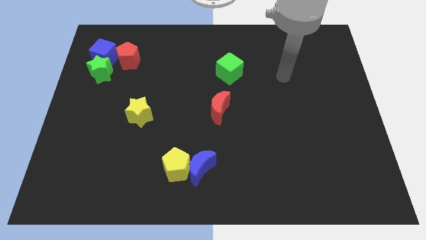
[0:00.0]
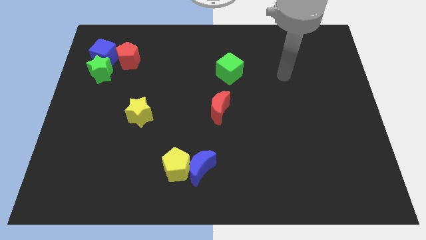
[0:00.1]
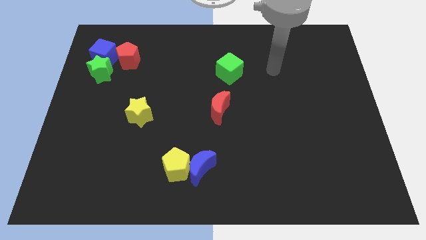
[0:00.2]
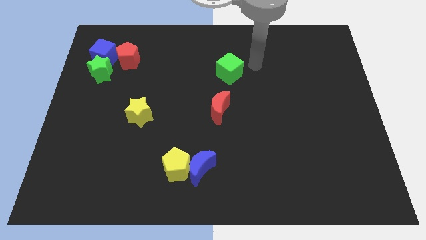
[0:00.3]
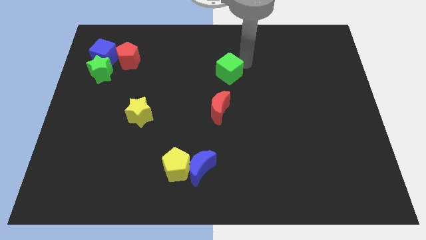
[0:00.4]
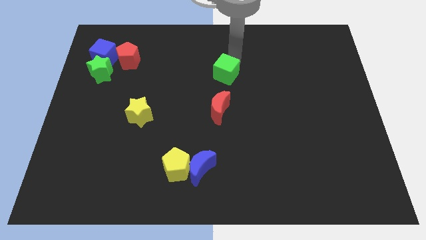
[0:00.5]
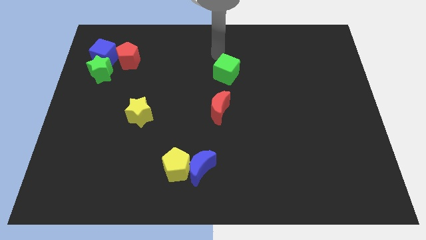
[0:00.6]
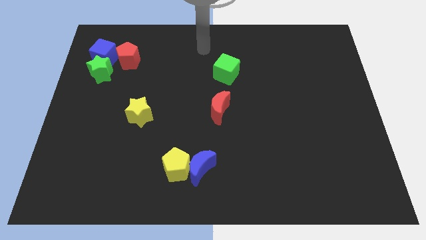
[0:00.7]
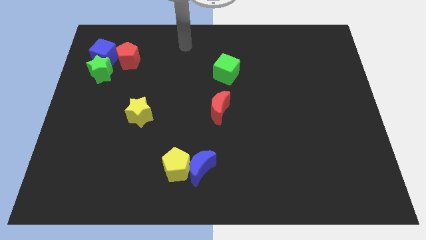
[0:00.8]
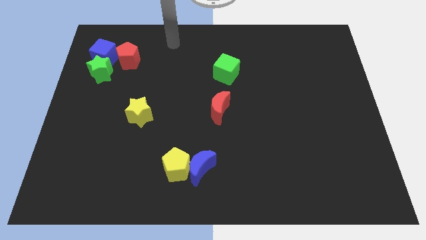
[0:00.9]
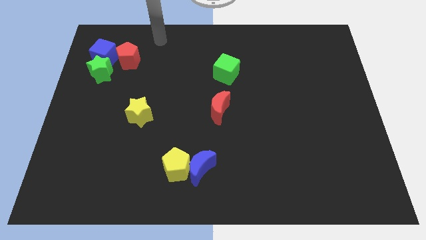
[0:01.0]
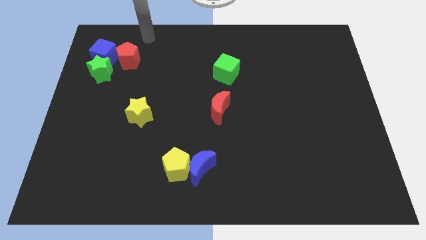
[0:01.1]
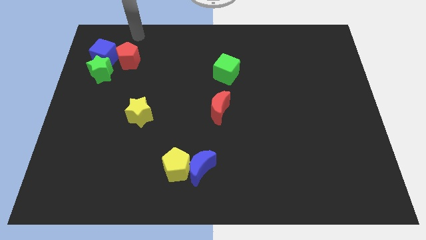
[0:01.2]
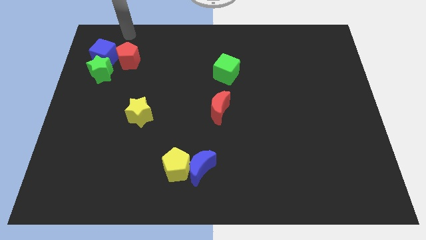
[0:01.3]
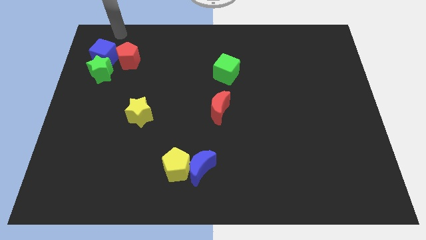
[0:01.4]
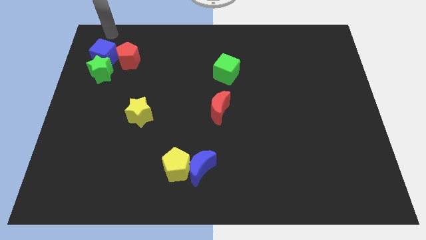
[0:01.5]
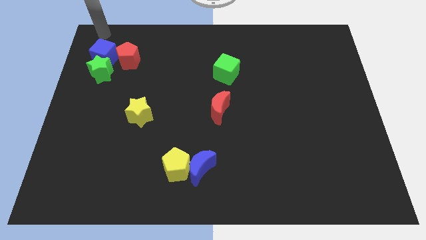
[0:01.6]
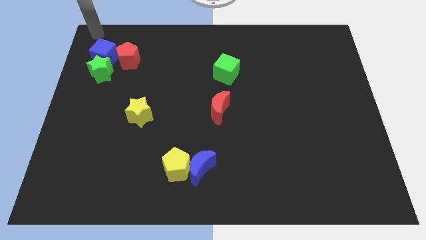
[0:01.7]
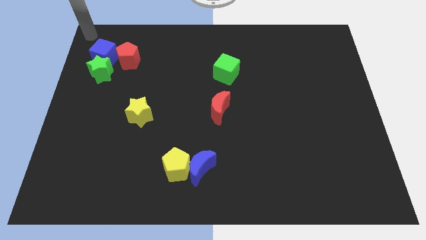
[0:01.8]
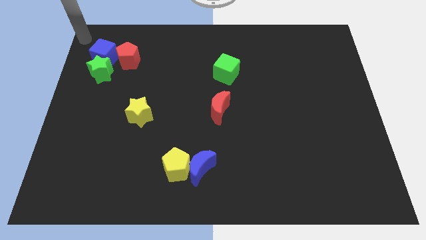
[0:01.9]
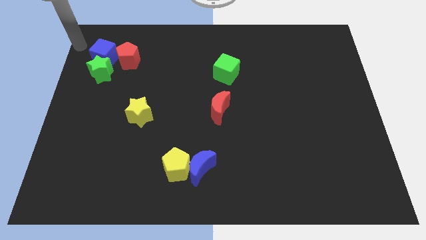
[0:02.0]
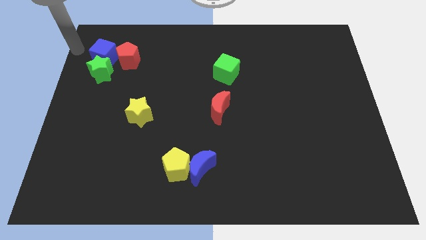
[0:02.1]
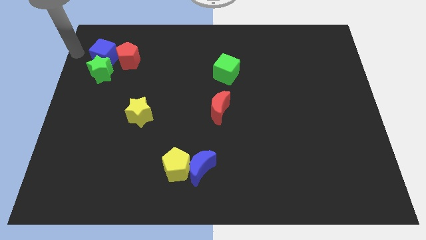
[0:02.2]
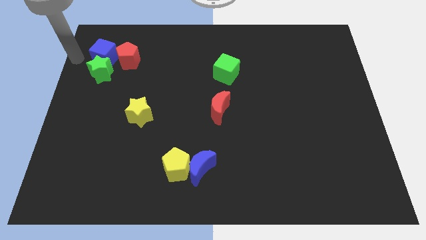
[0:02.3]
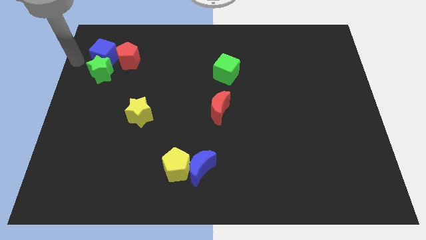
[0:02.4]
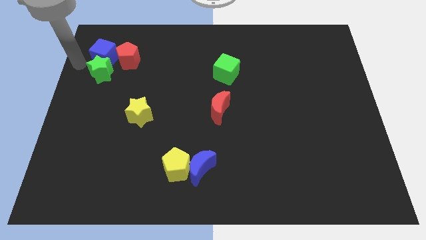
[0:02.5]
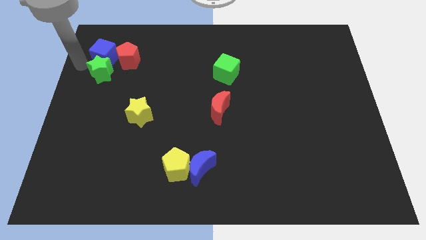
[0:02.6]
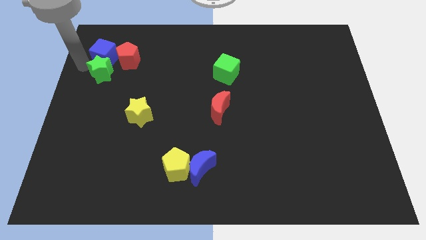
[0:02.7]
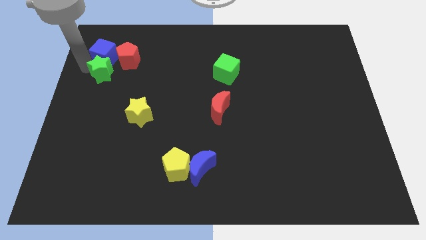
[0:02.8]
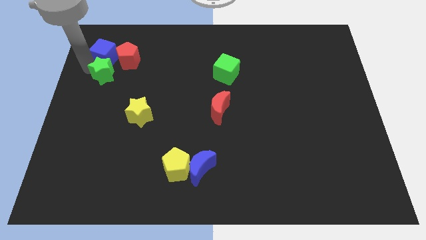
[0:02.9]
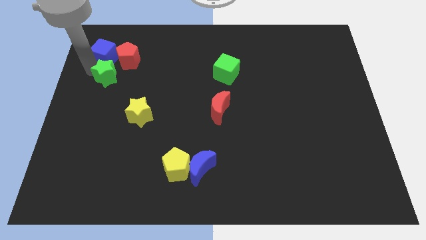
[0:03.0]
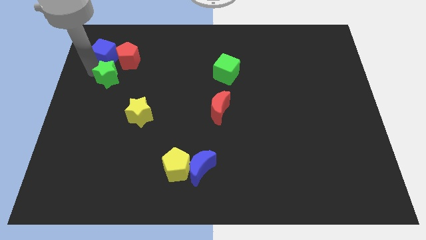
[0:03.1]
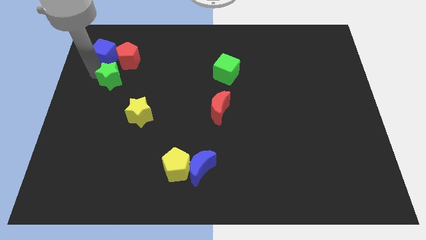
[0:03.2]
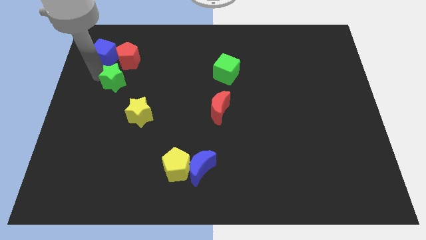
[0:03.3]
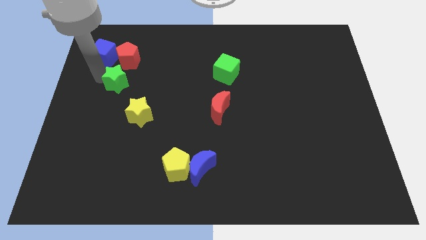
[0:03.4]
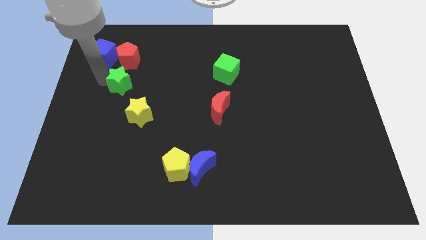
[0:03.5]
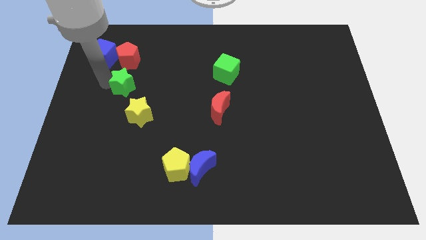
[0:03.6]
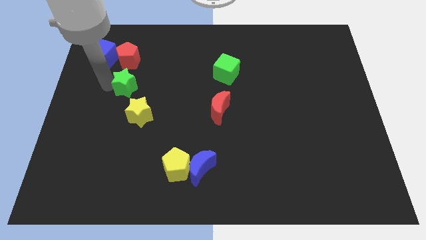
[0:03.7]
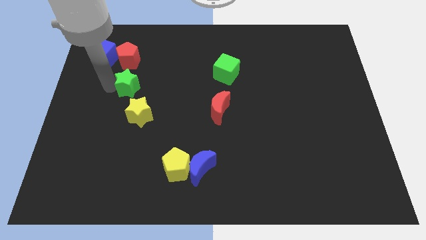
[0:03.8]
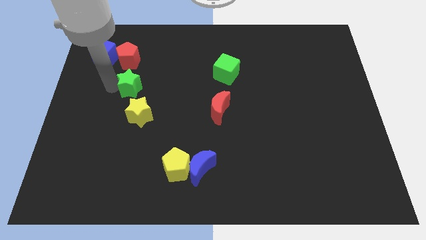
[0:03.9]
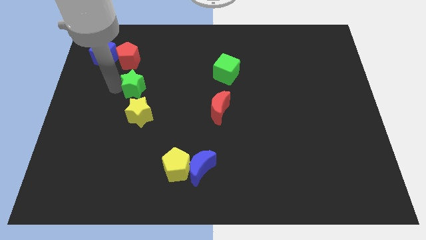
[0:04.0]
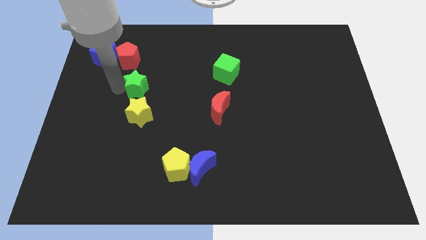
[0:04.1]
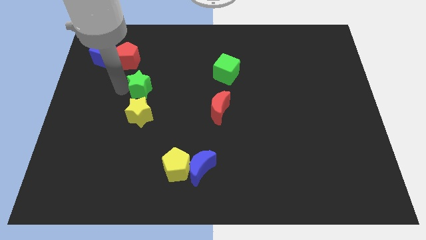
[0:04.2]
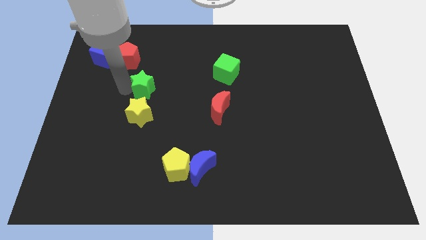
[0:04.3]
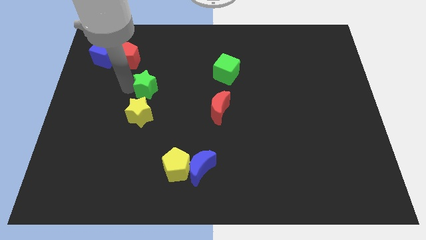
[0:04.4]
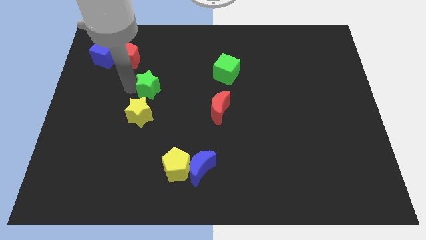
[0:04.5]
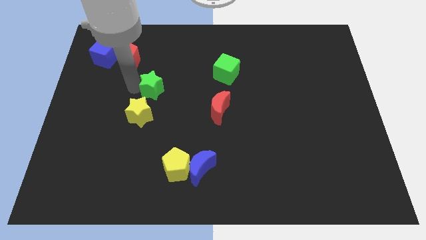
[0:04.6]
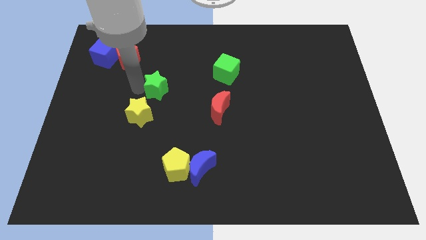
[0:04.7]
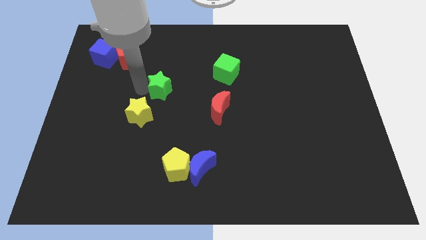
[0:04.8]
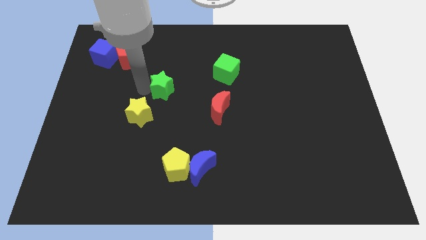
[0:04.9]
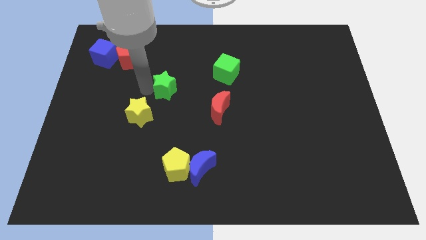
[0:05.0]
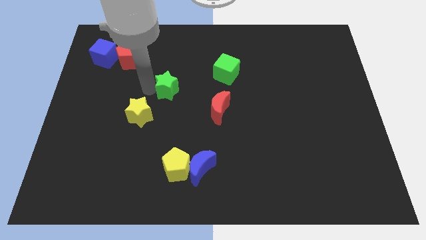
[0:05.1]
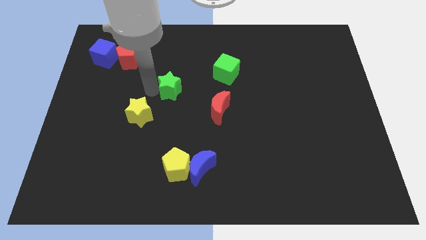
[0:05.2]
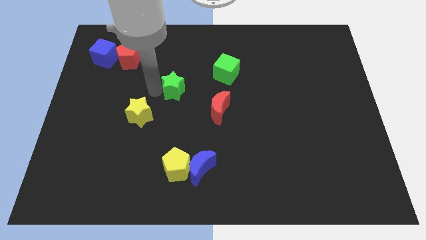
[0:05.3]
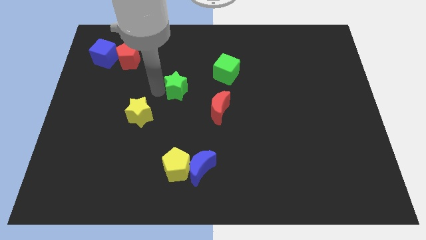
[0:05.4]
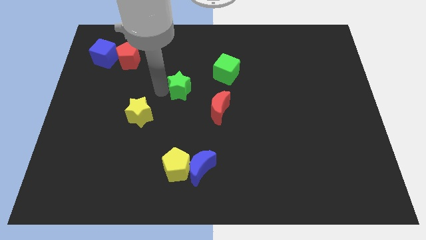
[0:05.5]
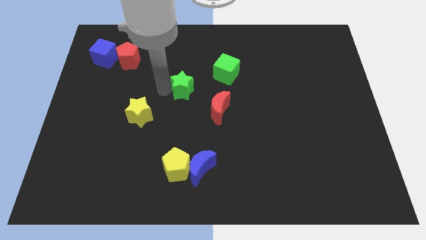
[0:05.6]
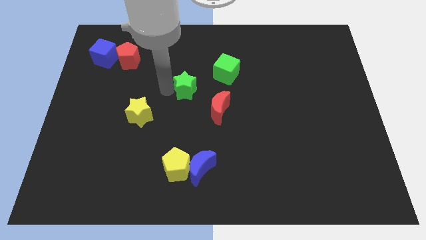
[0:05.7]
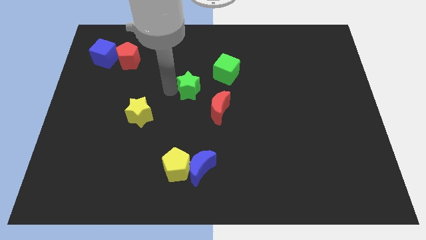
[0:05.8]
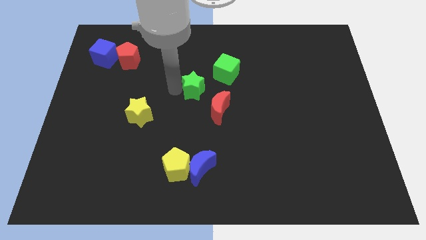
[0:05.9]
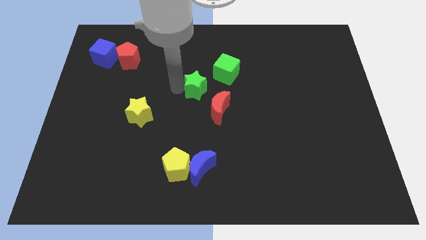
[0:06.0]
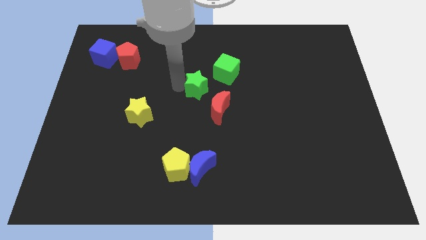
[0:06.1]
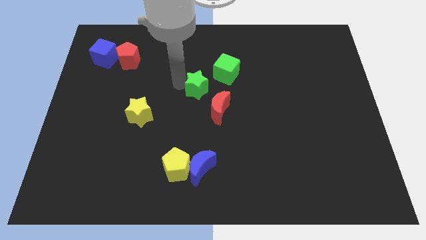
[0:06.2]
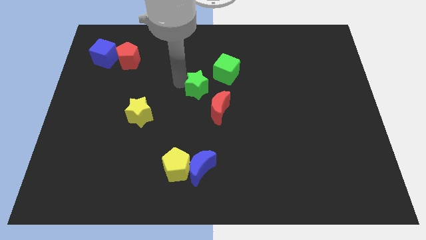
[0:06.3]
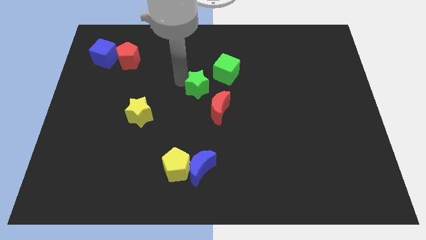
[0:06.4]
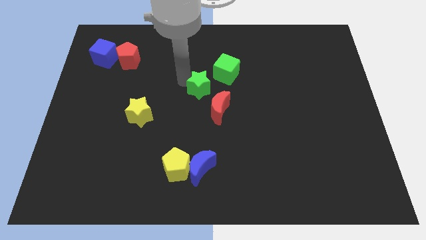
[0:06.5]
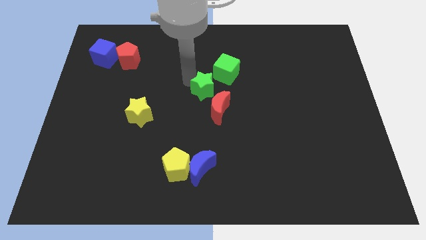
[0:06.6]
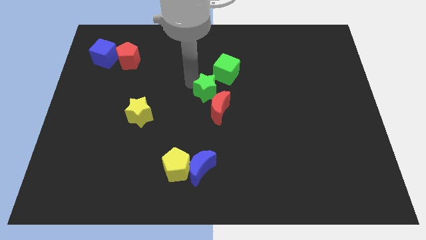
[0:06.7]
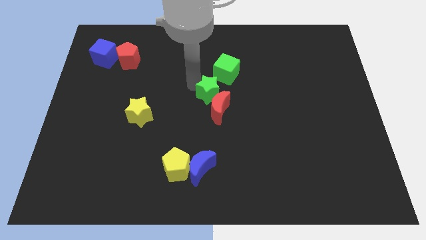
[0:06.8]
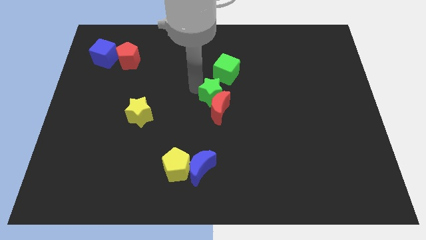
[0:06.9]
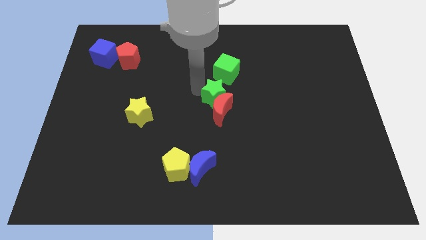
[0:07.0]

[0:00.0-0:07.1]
move the green star towards the red moon

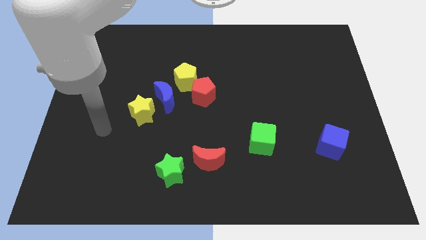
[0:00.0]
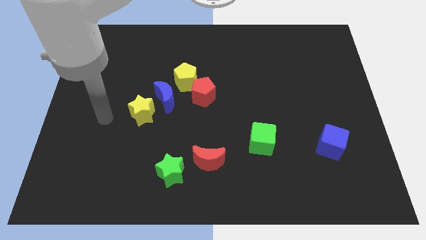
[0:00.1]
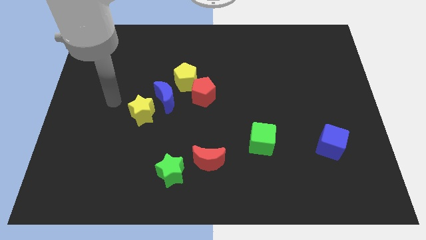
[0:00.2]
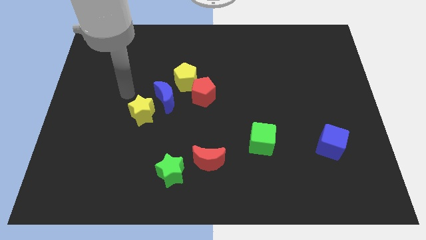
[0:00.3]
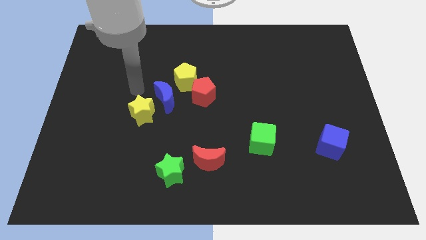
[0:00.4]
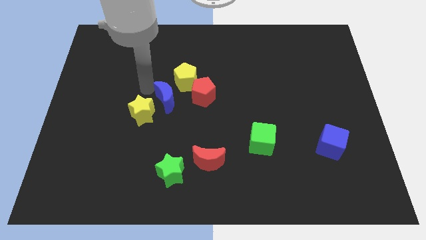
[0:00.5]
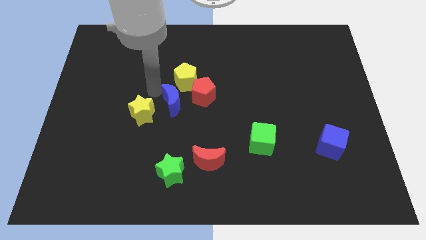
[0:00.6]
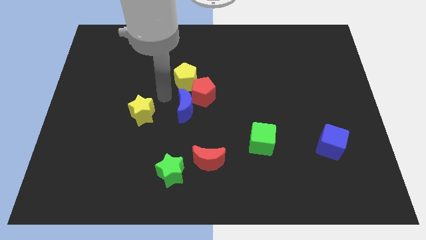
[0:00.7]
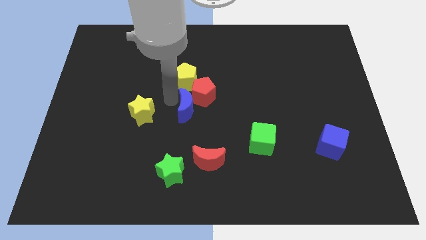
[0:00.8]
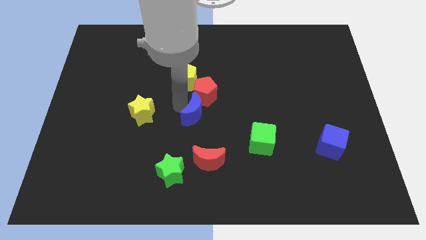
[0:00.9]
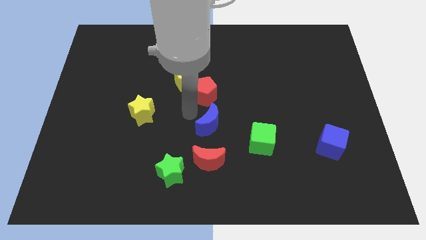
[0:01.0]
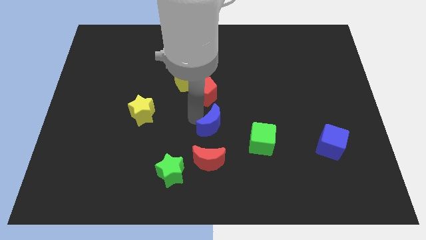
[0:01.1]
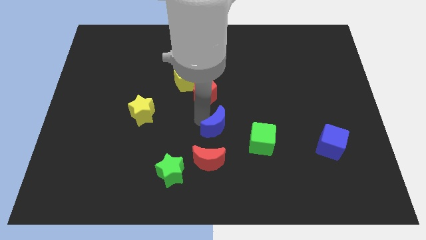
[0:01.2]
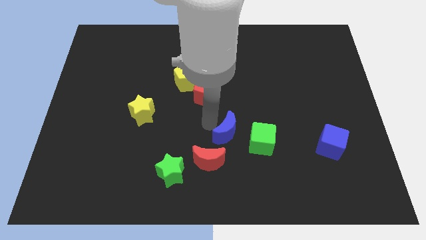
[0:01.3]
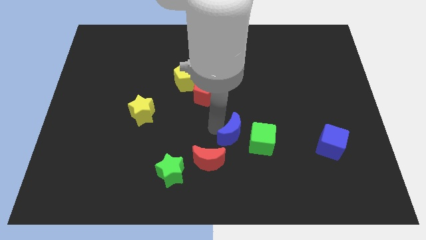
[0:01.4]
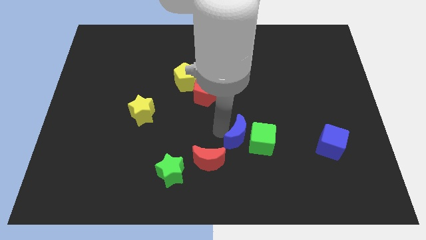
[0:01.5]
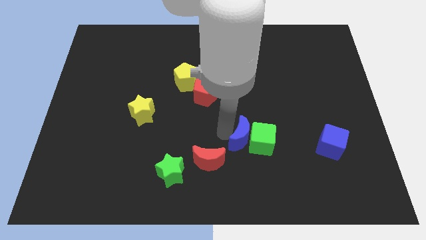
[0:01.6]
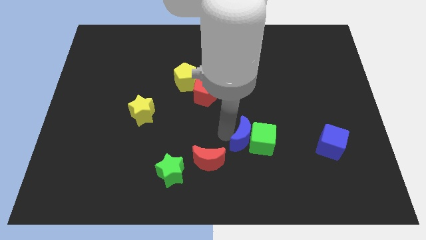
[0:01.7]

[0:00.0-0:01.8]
move the blue moon towards the green cube
